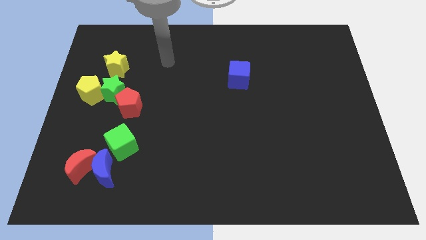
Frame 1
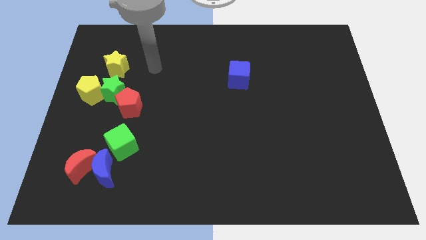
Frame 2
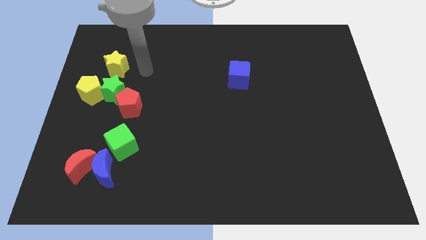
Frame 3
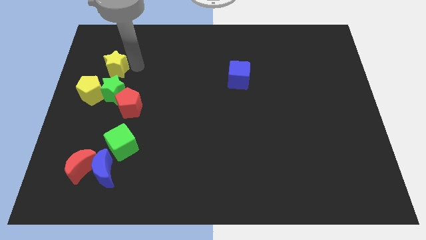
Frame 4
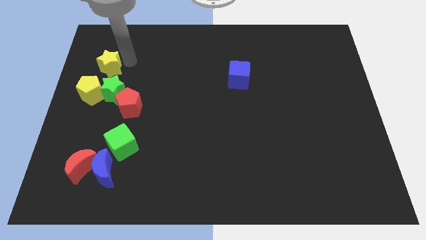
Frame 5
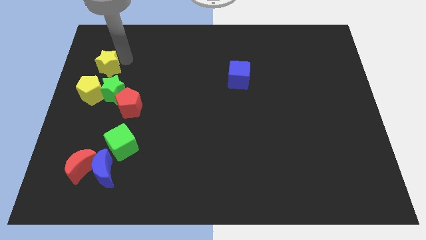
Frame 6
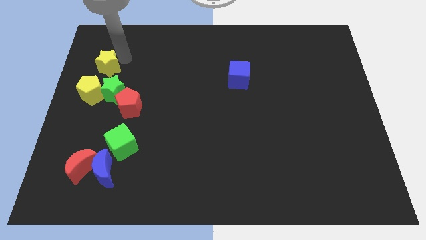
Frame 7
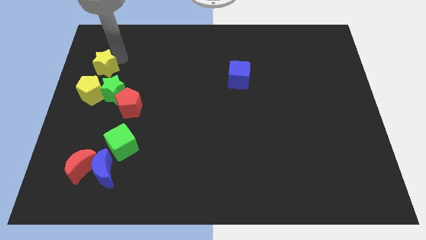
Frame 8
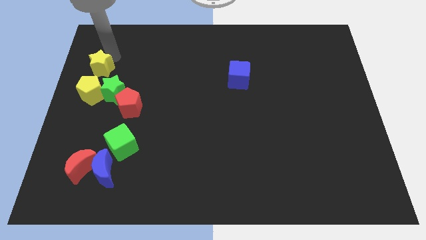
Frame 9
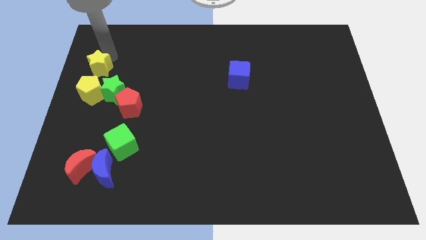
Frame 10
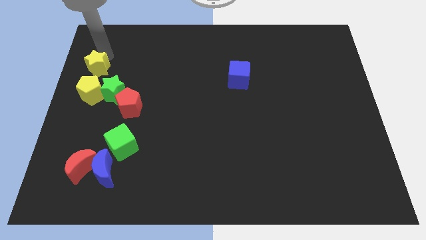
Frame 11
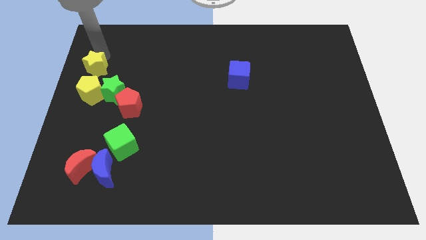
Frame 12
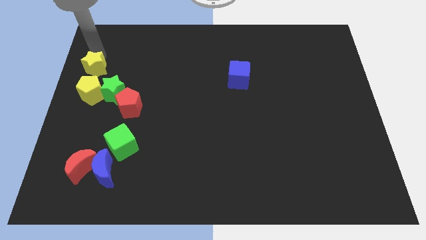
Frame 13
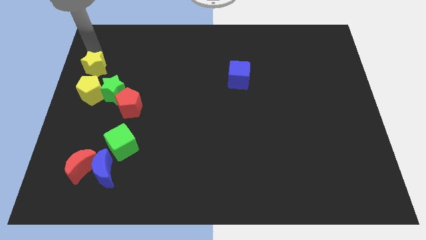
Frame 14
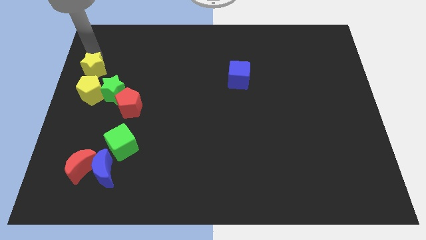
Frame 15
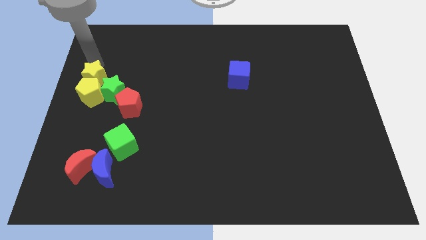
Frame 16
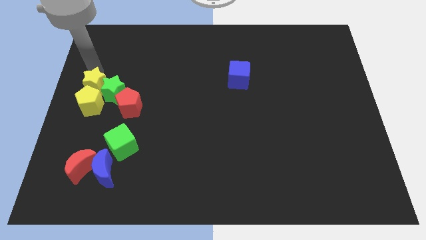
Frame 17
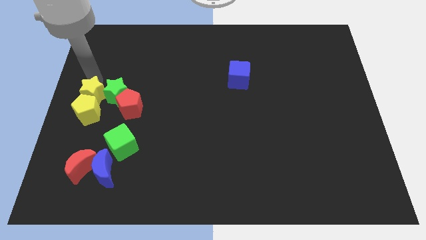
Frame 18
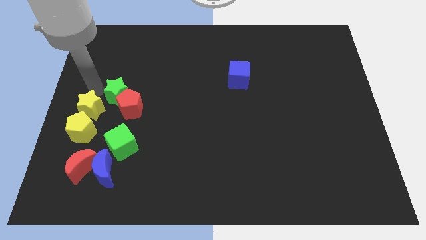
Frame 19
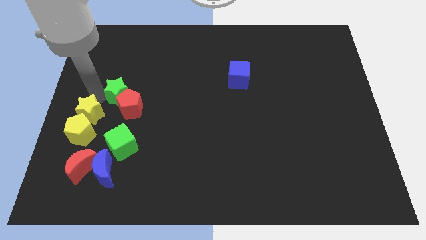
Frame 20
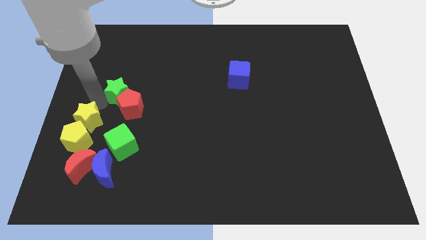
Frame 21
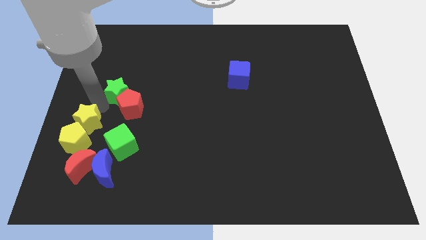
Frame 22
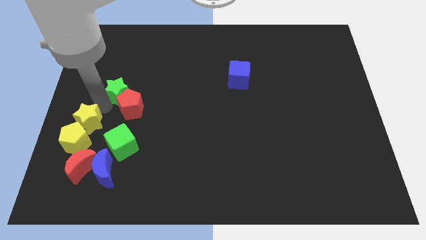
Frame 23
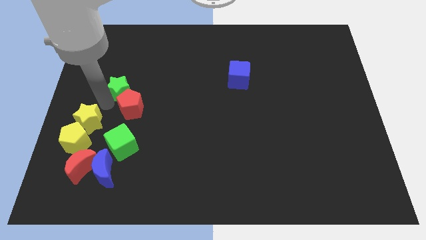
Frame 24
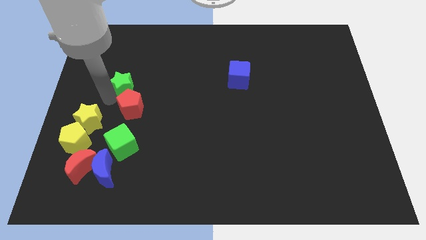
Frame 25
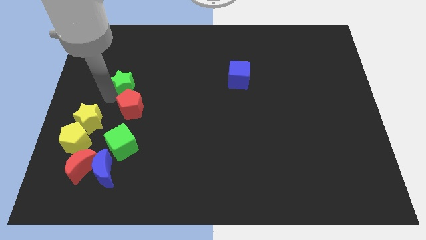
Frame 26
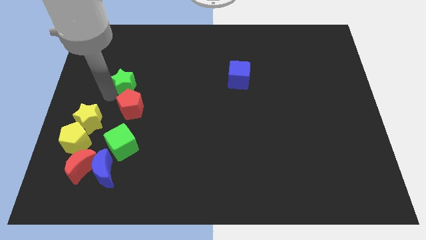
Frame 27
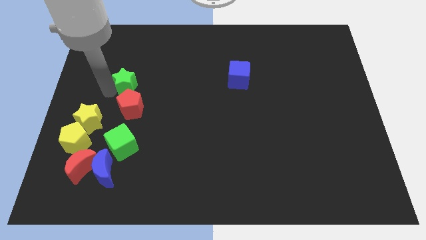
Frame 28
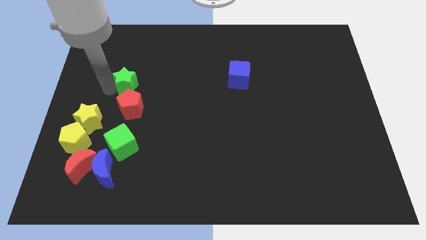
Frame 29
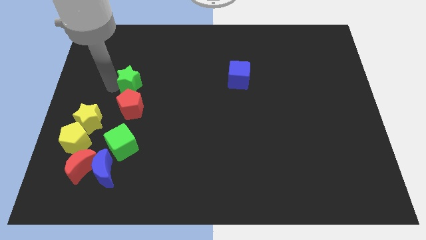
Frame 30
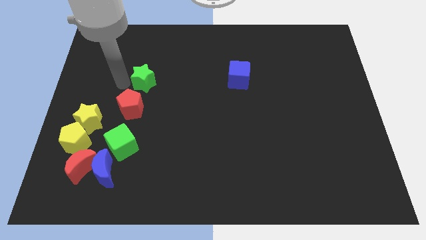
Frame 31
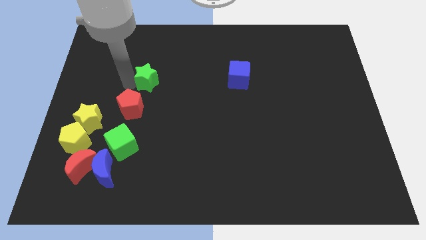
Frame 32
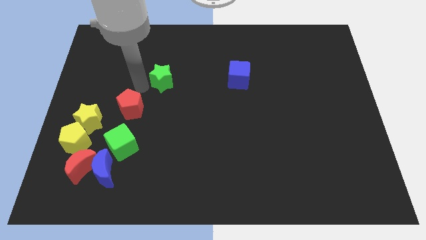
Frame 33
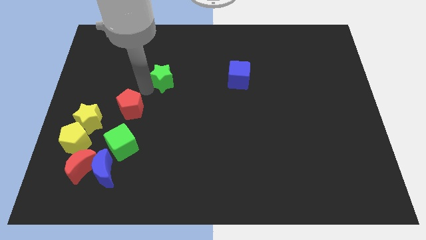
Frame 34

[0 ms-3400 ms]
push the yellow star into the yellow pentagon

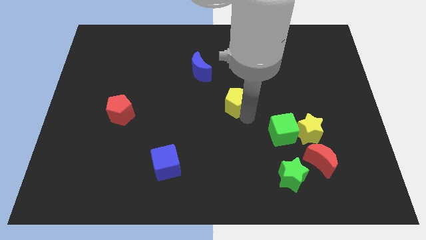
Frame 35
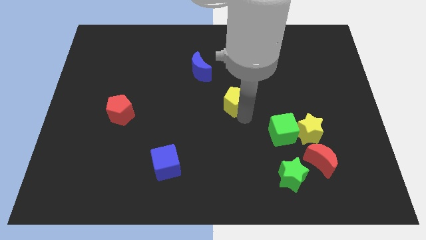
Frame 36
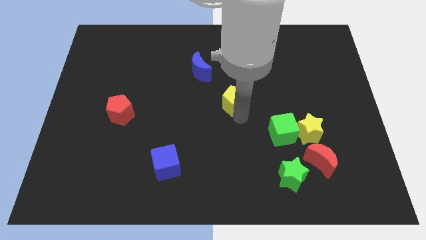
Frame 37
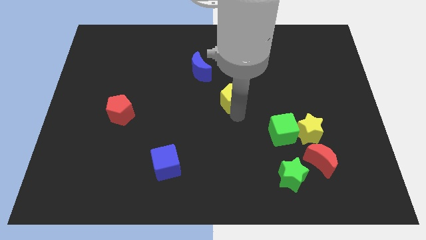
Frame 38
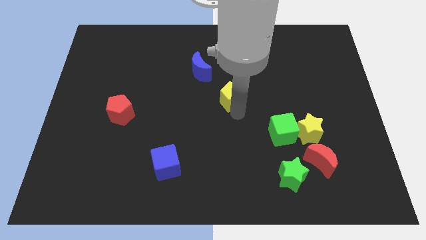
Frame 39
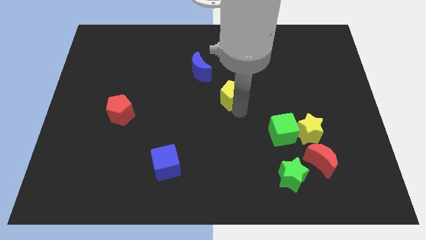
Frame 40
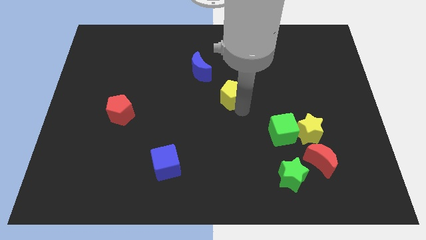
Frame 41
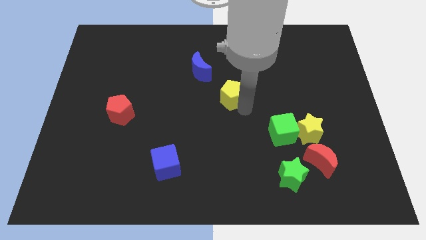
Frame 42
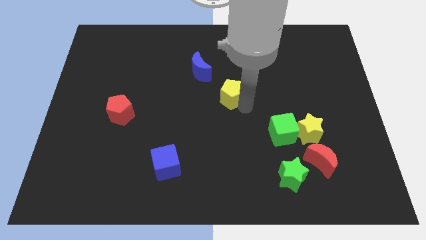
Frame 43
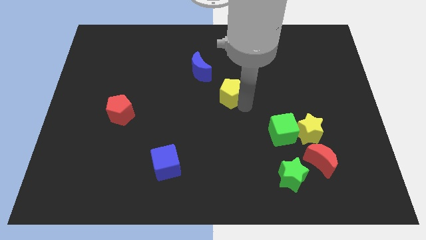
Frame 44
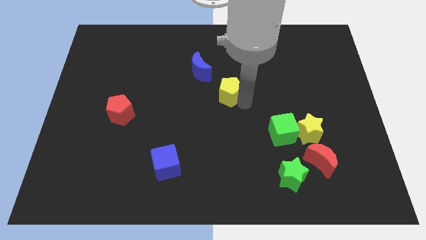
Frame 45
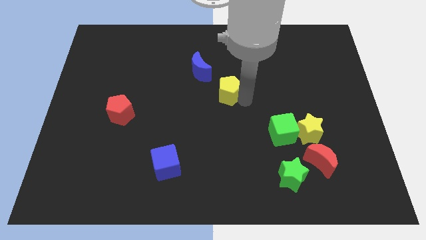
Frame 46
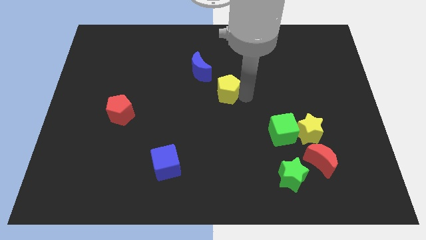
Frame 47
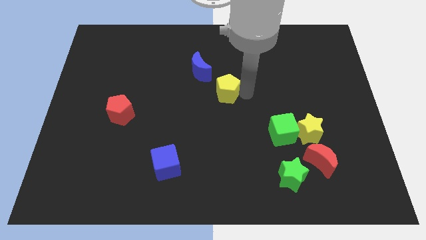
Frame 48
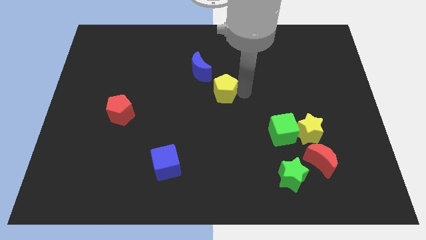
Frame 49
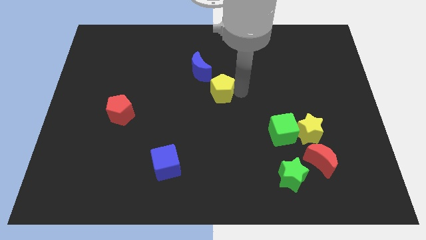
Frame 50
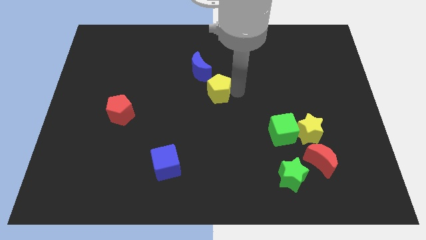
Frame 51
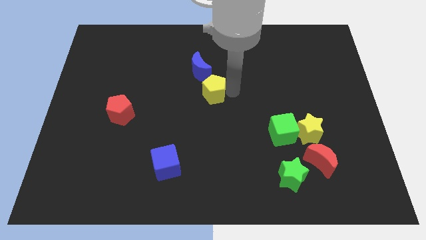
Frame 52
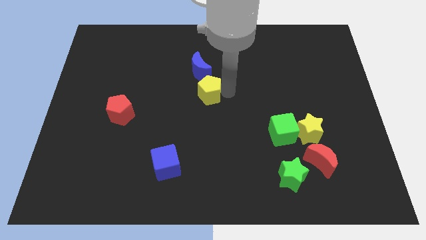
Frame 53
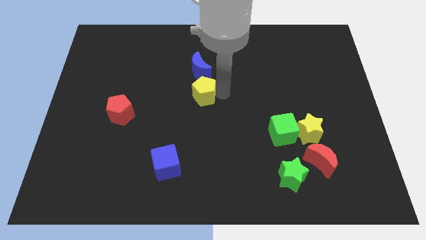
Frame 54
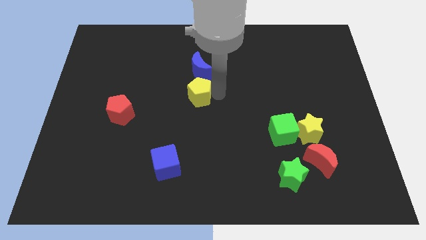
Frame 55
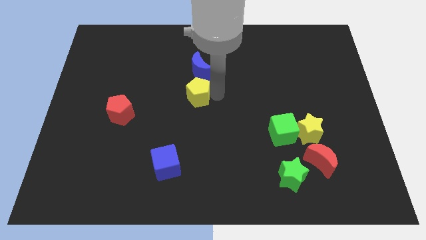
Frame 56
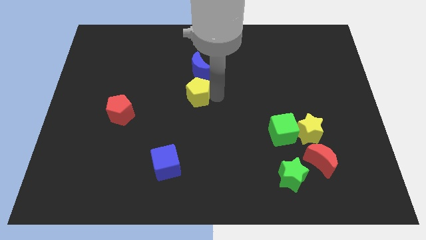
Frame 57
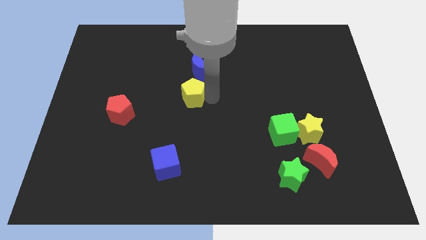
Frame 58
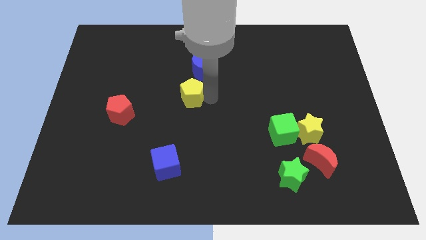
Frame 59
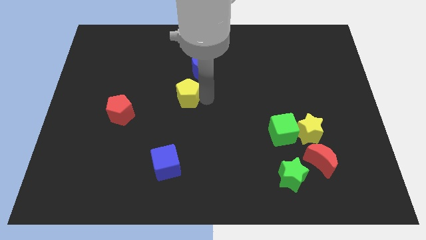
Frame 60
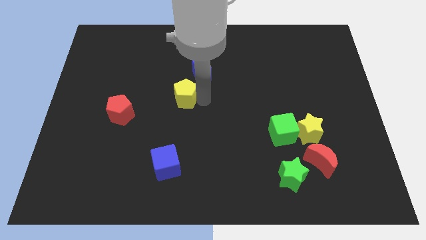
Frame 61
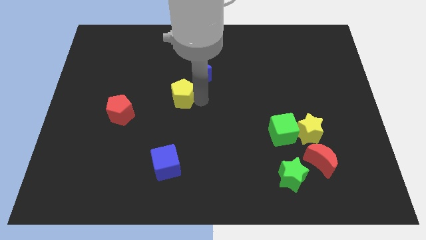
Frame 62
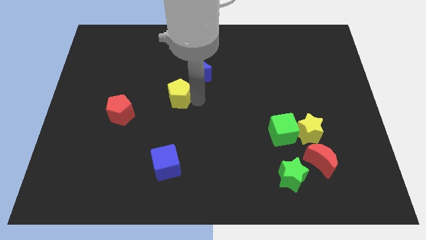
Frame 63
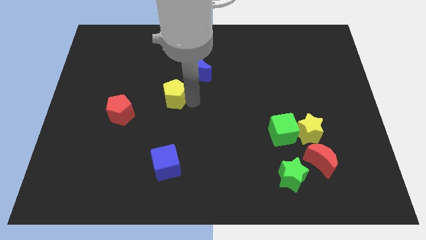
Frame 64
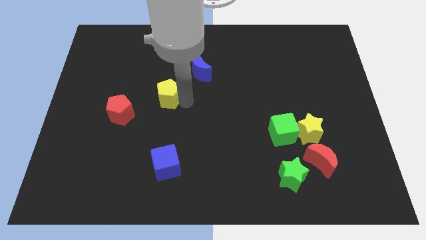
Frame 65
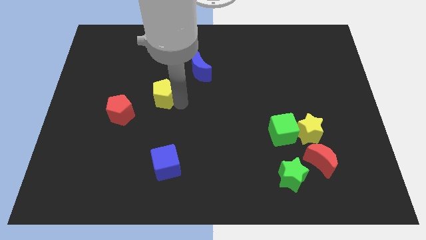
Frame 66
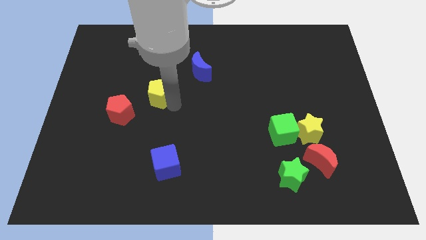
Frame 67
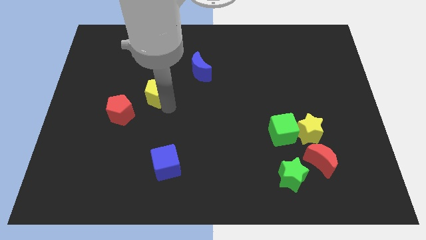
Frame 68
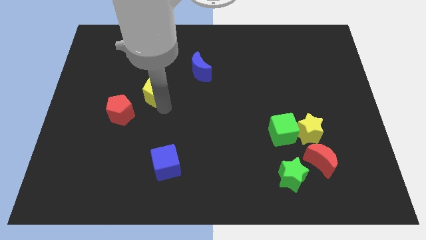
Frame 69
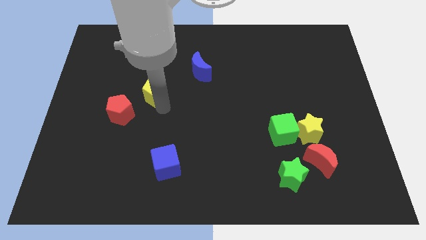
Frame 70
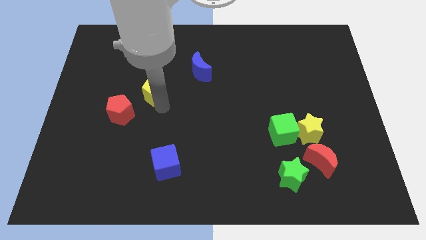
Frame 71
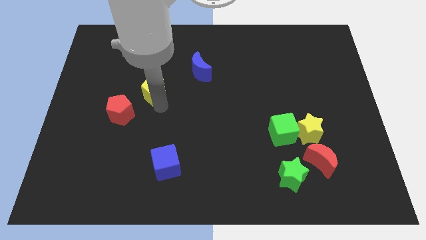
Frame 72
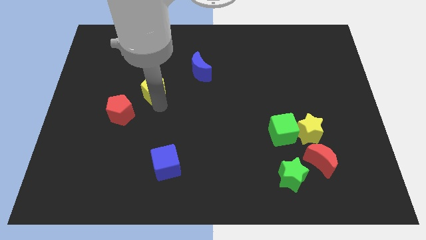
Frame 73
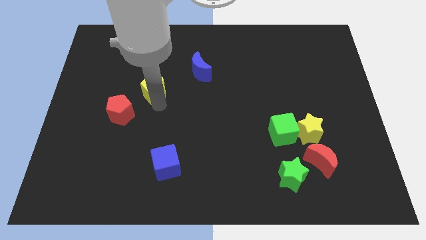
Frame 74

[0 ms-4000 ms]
place the yellow pentagon in between blue moon and red pentagon

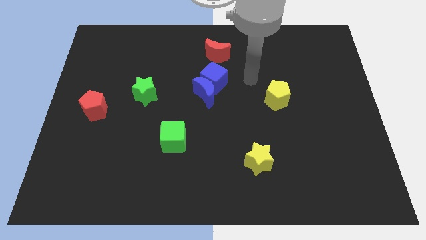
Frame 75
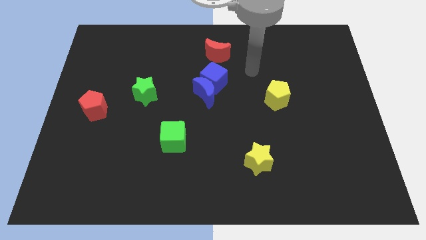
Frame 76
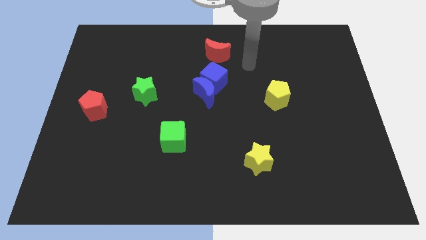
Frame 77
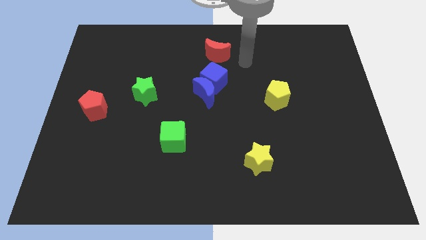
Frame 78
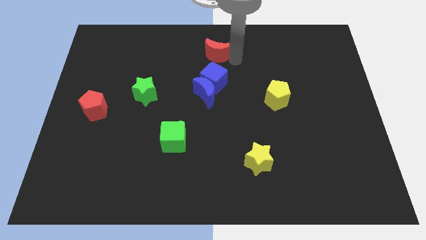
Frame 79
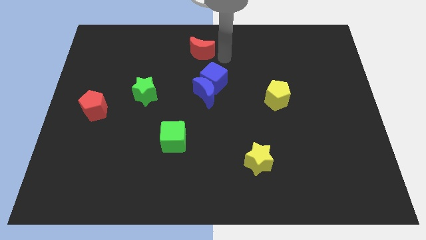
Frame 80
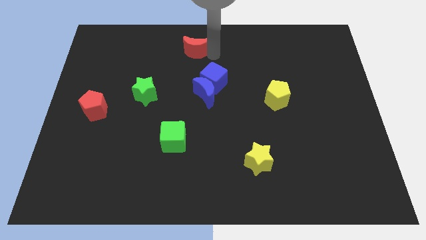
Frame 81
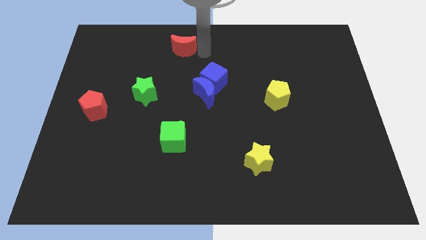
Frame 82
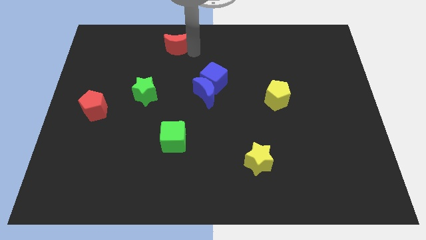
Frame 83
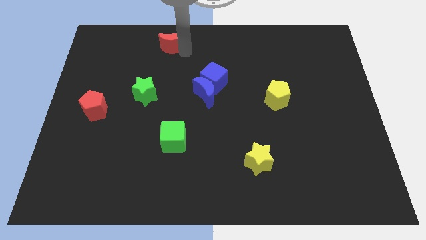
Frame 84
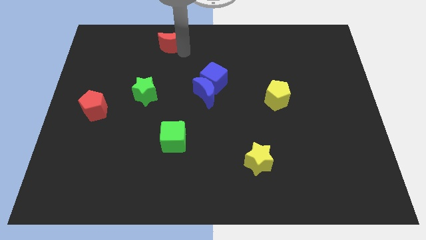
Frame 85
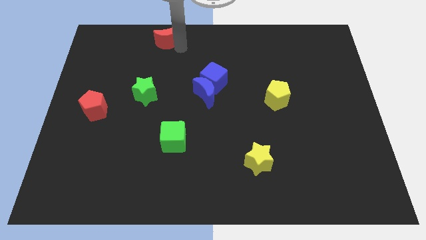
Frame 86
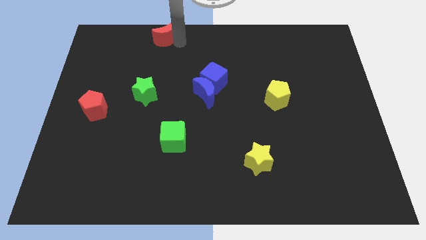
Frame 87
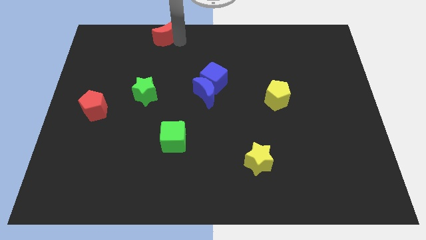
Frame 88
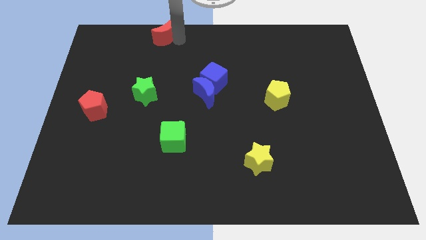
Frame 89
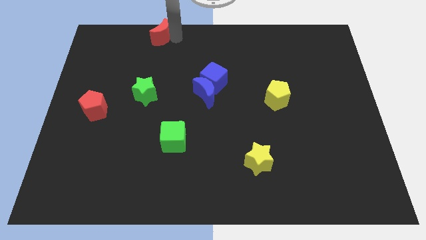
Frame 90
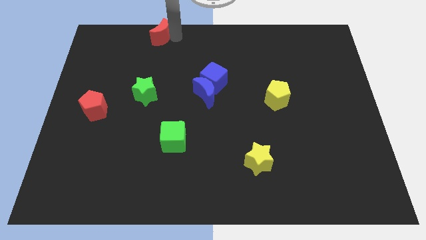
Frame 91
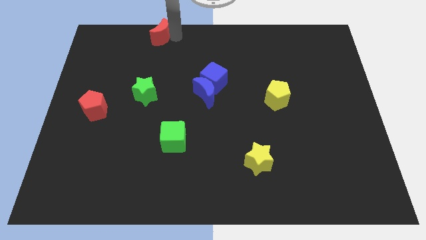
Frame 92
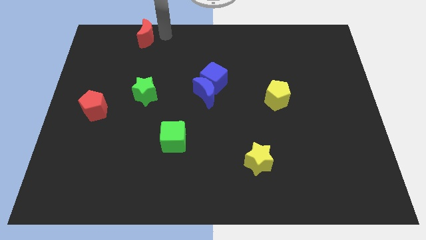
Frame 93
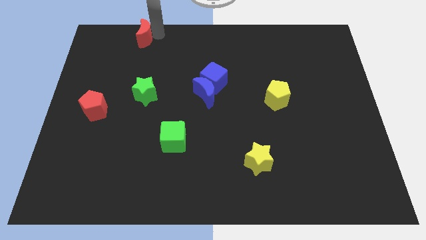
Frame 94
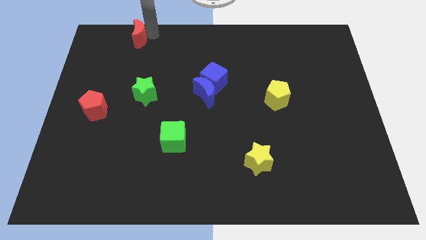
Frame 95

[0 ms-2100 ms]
place the red moon above the green star
